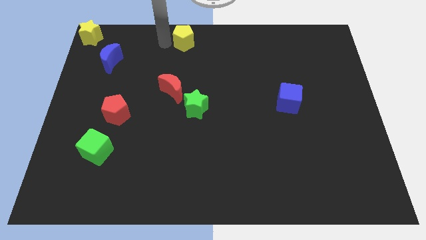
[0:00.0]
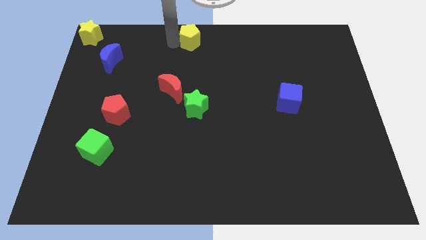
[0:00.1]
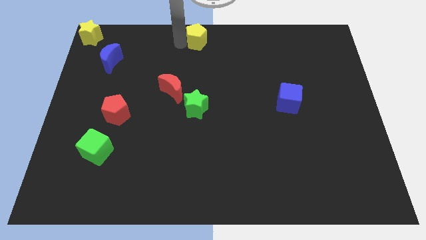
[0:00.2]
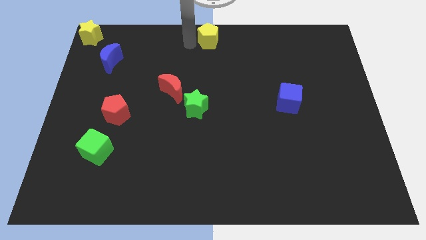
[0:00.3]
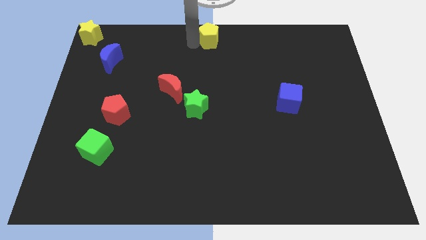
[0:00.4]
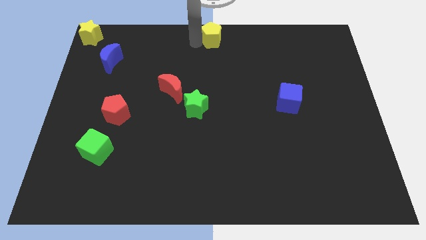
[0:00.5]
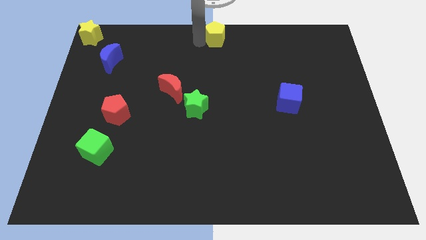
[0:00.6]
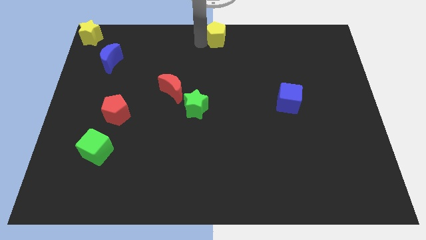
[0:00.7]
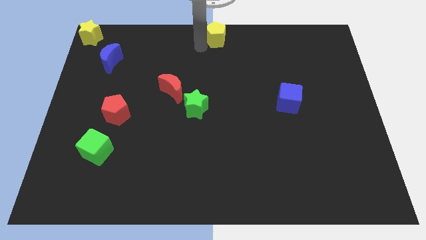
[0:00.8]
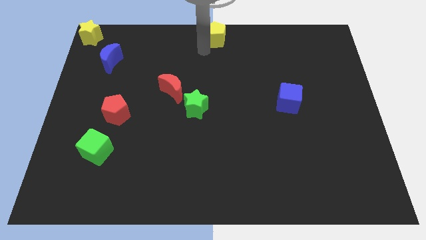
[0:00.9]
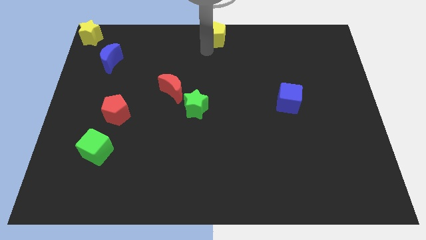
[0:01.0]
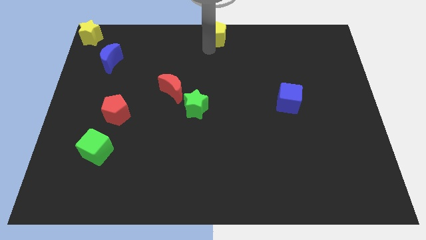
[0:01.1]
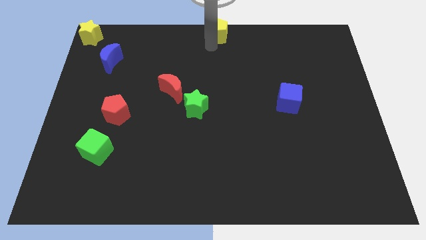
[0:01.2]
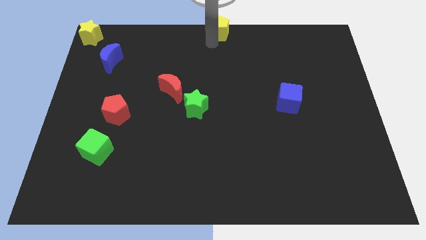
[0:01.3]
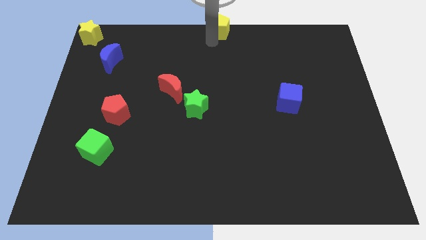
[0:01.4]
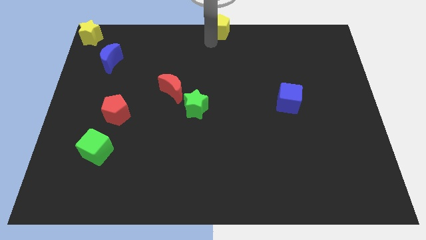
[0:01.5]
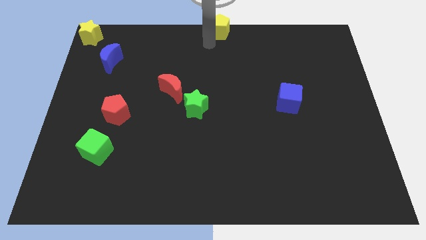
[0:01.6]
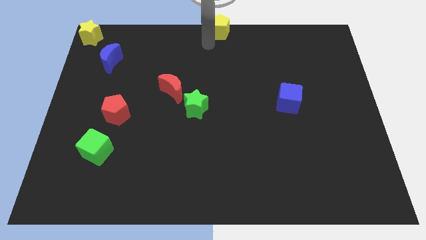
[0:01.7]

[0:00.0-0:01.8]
place the yellow pentagon above the green star

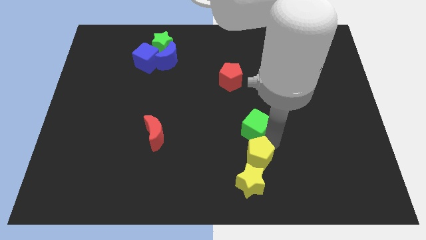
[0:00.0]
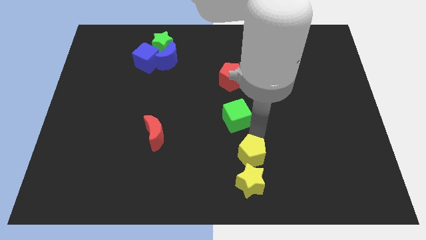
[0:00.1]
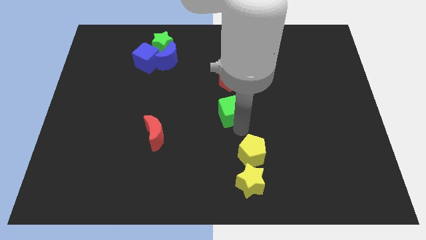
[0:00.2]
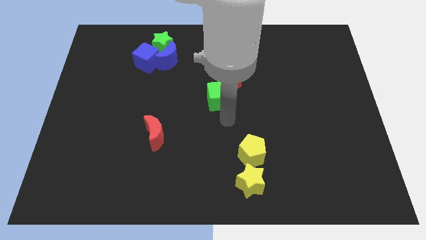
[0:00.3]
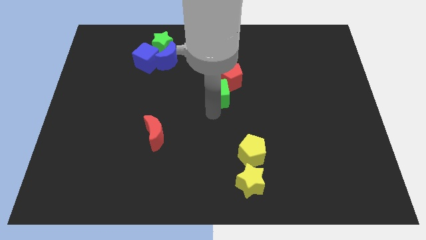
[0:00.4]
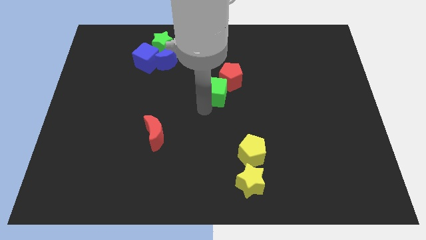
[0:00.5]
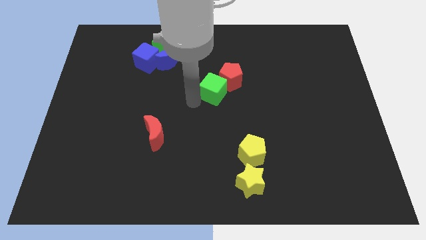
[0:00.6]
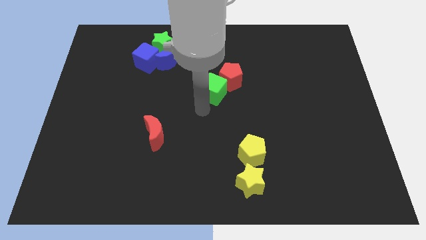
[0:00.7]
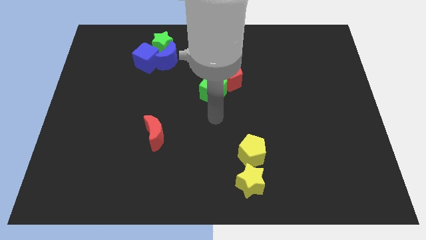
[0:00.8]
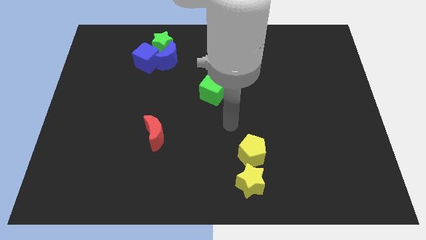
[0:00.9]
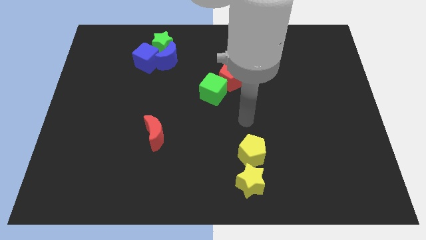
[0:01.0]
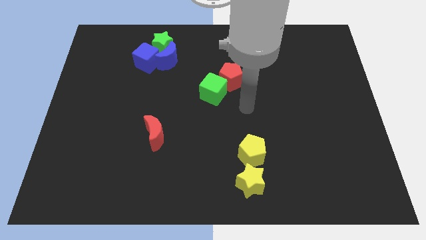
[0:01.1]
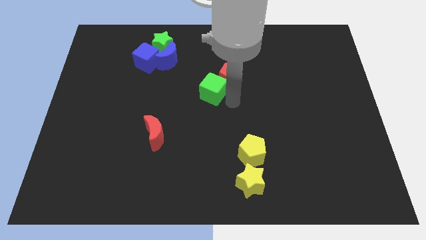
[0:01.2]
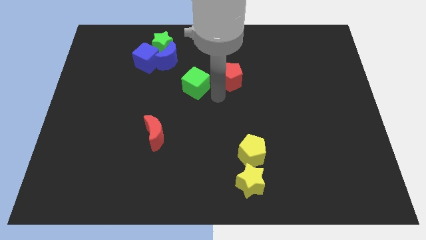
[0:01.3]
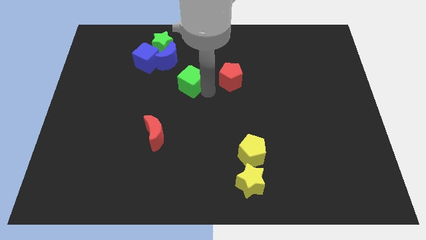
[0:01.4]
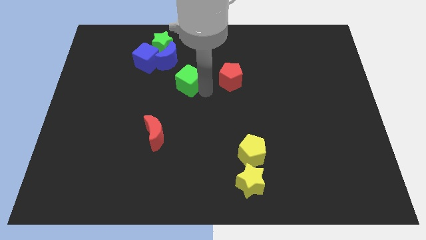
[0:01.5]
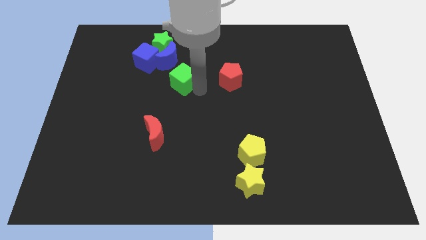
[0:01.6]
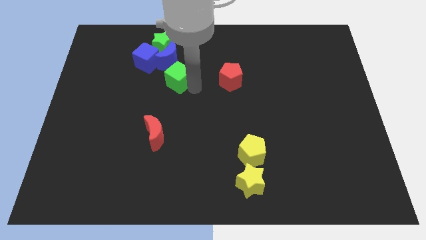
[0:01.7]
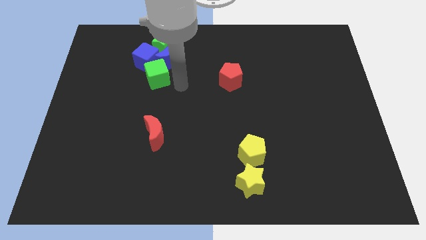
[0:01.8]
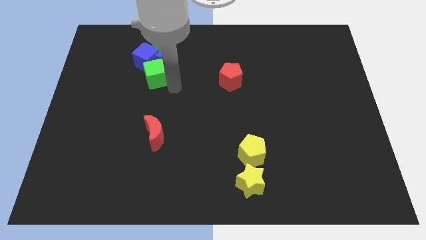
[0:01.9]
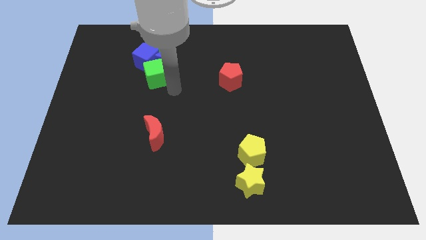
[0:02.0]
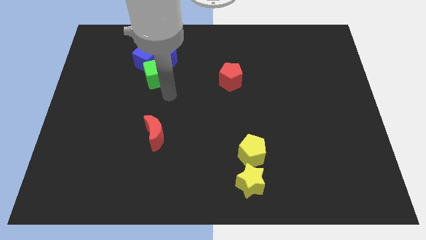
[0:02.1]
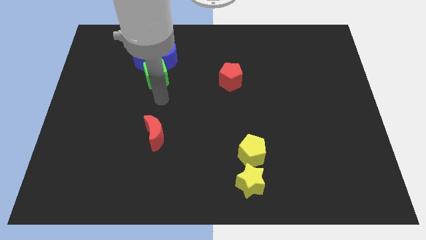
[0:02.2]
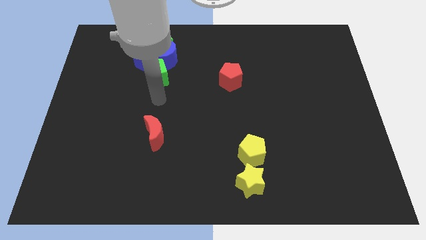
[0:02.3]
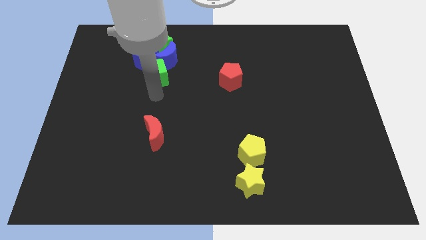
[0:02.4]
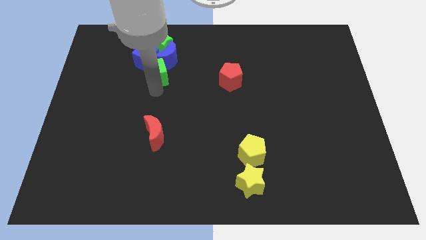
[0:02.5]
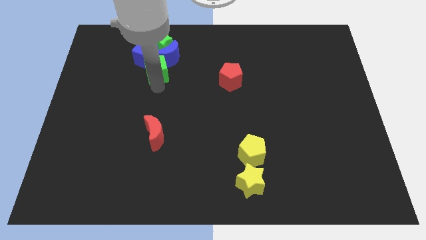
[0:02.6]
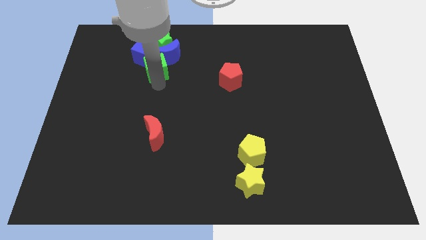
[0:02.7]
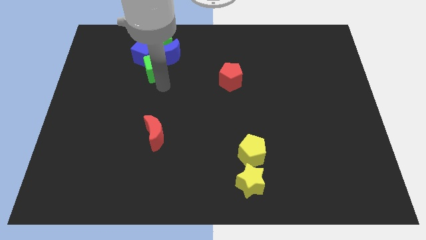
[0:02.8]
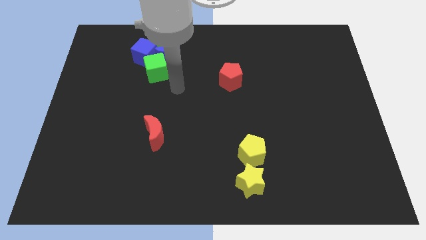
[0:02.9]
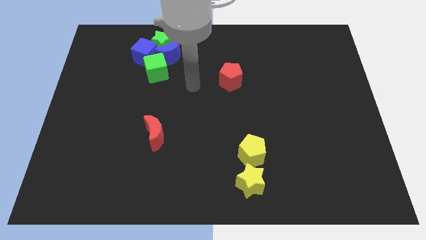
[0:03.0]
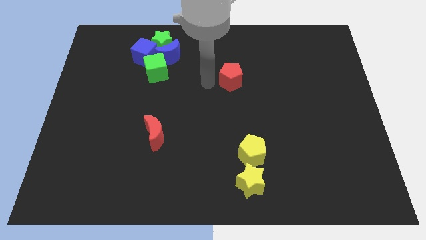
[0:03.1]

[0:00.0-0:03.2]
attach the green cube to the blue cube

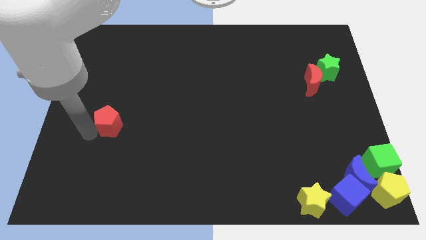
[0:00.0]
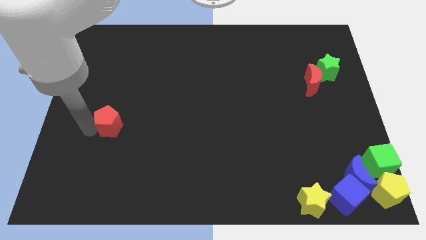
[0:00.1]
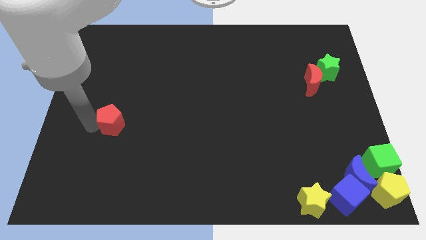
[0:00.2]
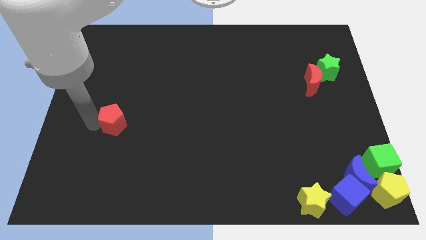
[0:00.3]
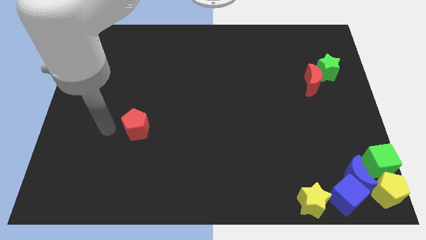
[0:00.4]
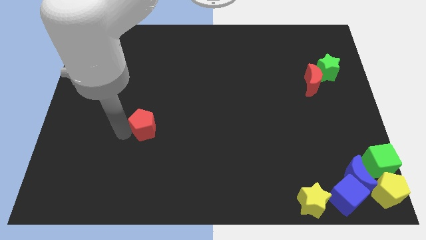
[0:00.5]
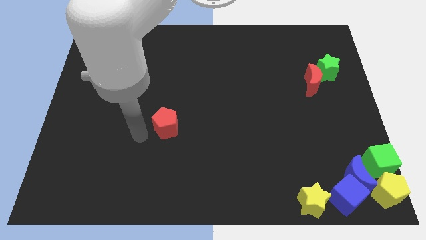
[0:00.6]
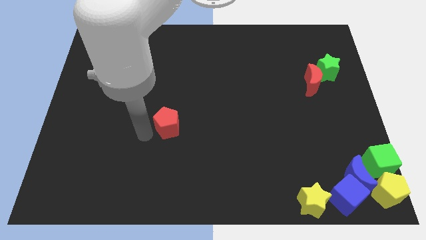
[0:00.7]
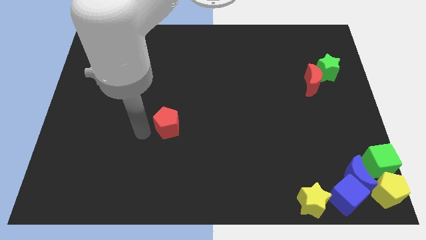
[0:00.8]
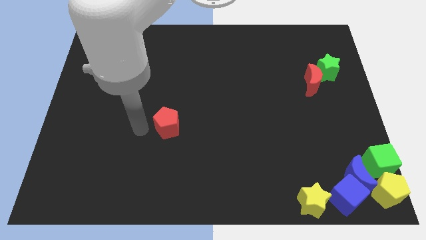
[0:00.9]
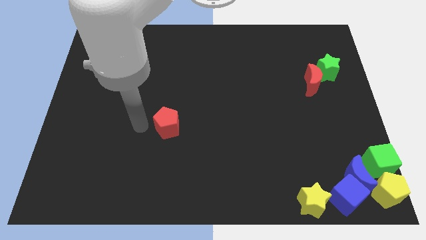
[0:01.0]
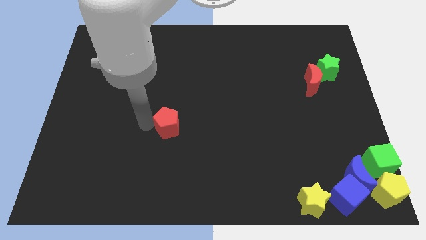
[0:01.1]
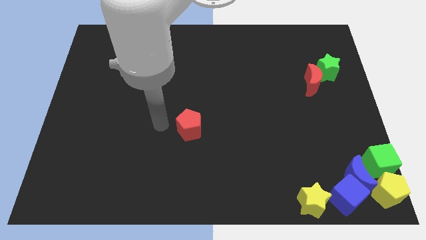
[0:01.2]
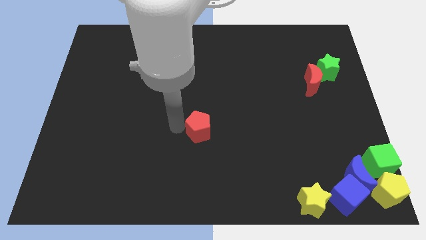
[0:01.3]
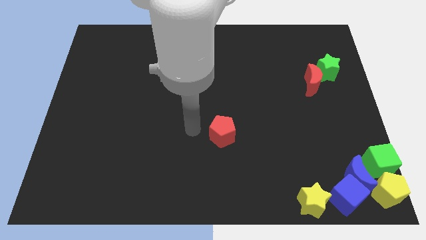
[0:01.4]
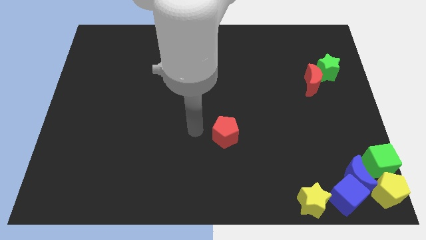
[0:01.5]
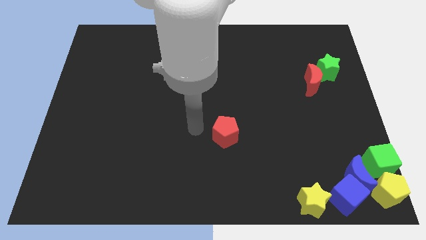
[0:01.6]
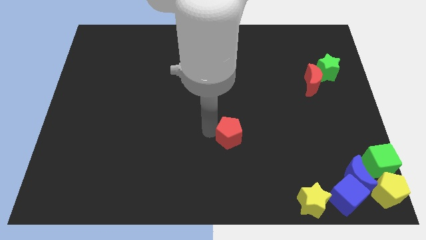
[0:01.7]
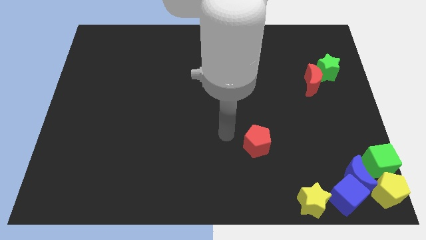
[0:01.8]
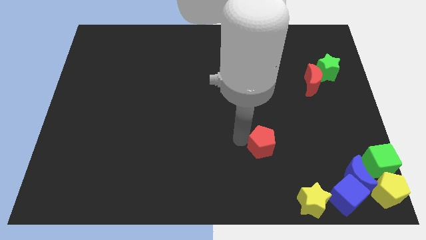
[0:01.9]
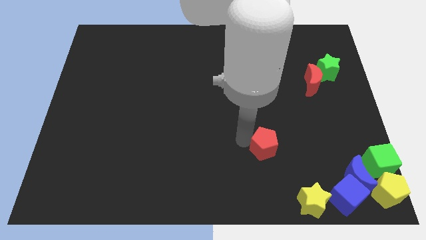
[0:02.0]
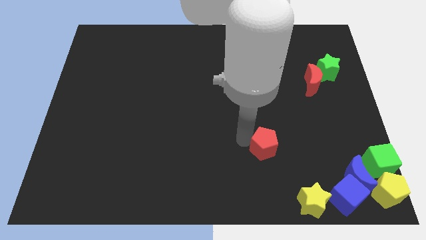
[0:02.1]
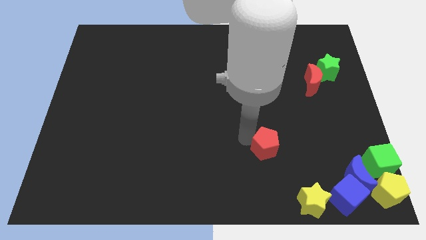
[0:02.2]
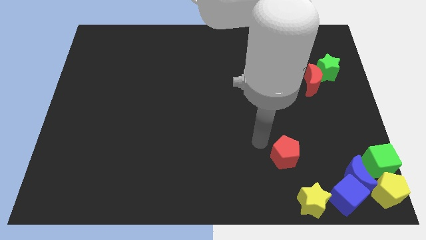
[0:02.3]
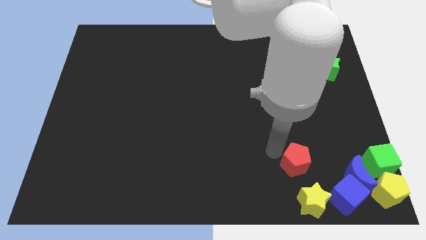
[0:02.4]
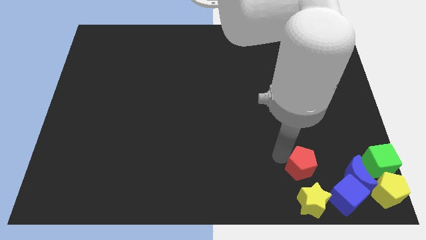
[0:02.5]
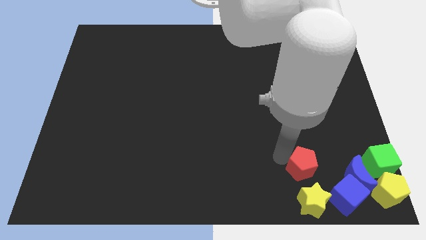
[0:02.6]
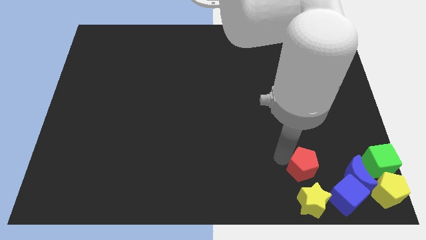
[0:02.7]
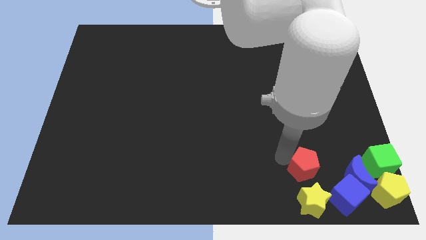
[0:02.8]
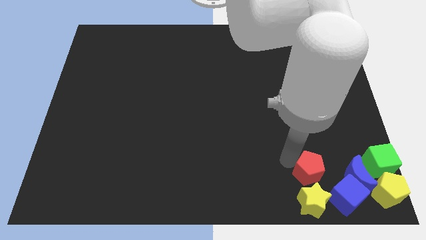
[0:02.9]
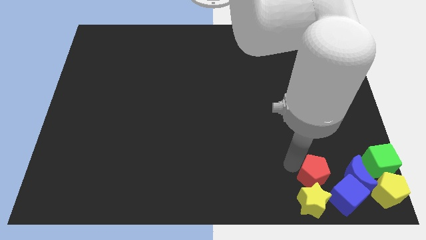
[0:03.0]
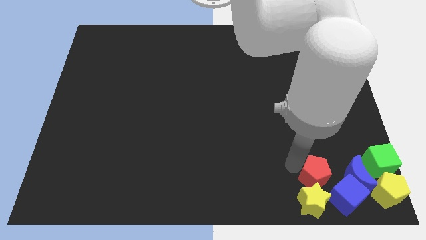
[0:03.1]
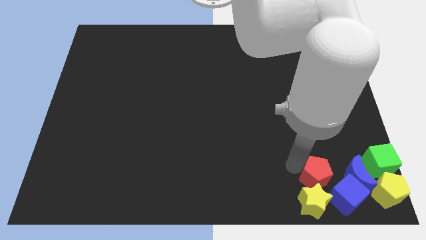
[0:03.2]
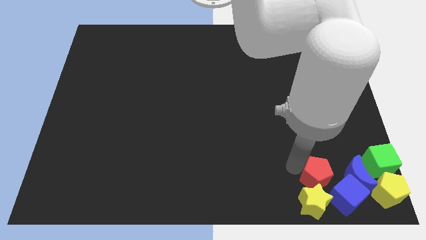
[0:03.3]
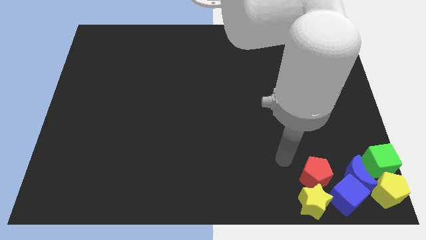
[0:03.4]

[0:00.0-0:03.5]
place the red pentagon to the top side of the yellow star

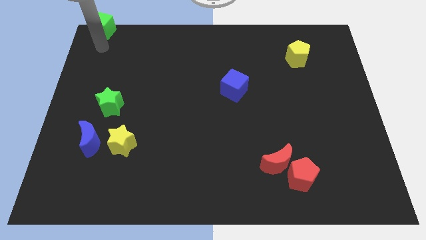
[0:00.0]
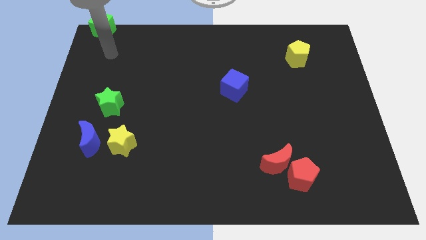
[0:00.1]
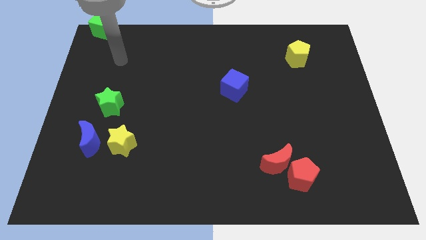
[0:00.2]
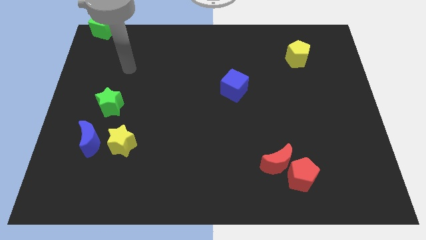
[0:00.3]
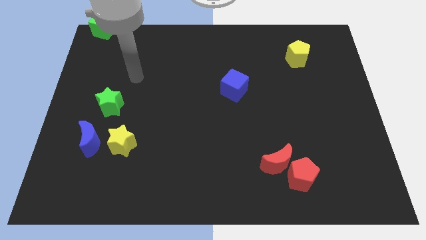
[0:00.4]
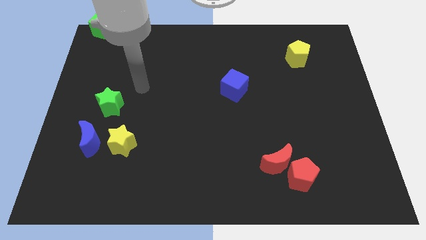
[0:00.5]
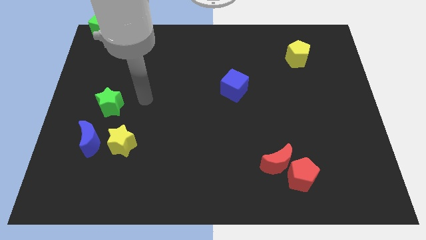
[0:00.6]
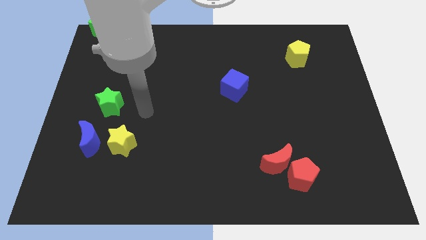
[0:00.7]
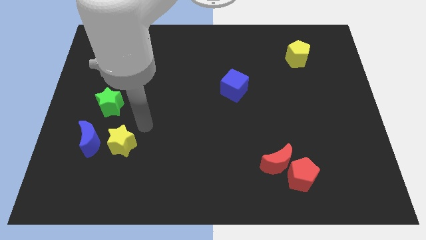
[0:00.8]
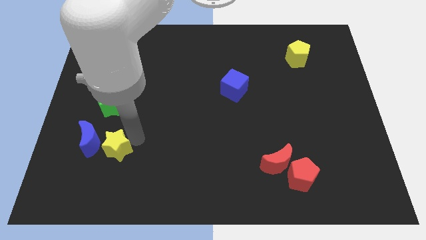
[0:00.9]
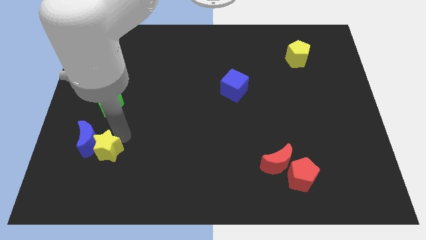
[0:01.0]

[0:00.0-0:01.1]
slide the yellow star into the blue moon
